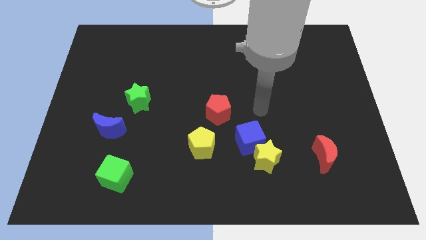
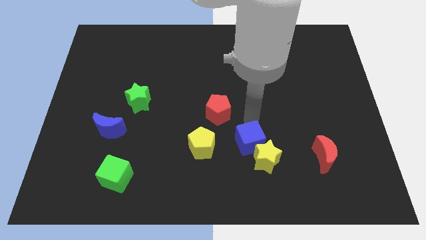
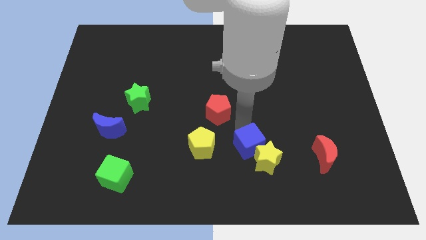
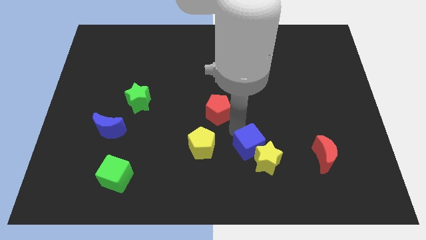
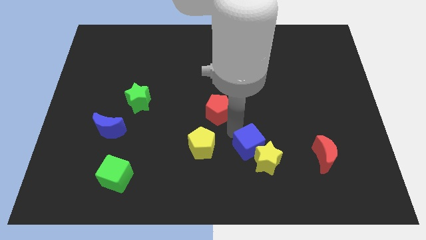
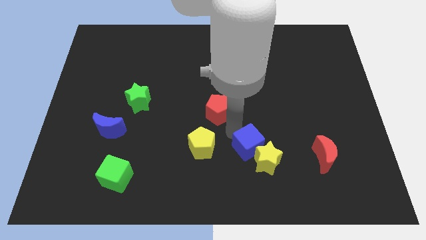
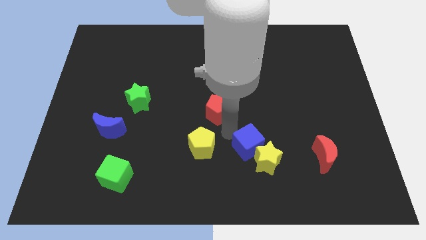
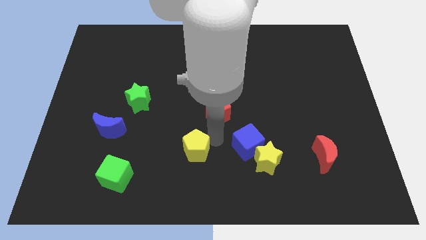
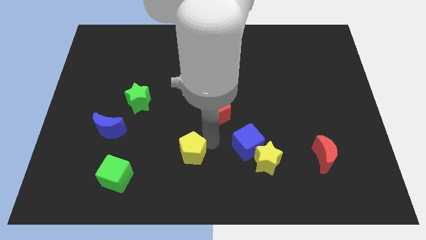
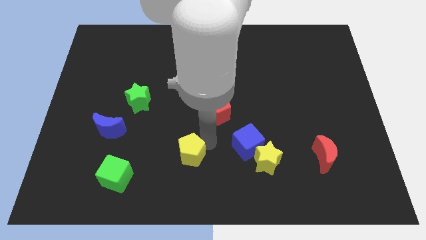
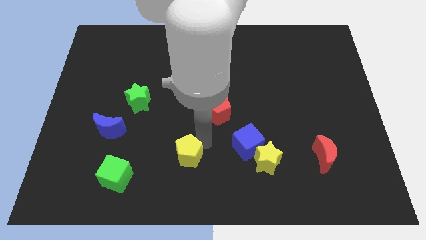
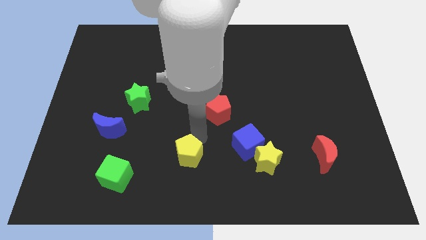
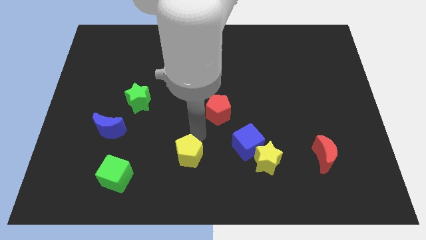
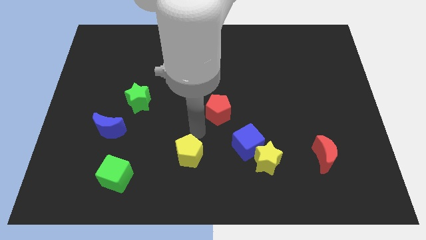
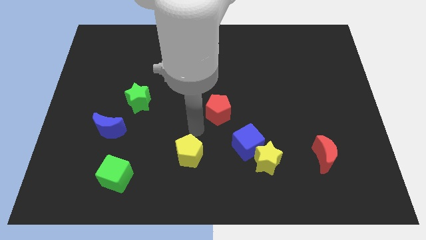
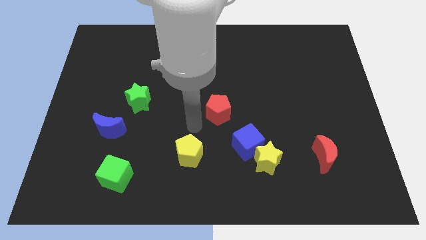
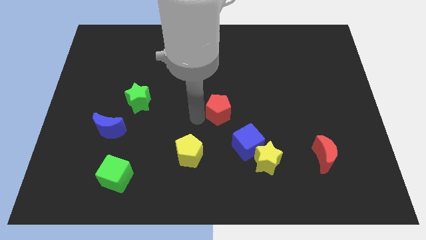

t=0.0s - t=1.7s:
move your arm to the left of the red pentagon

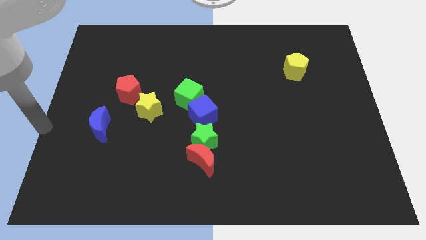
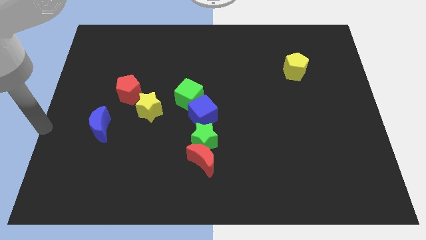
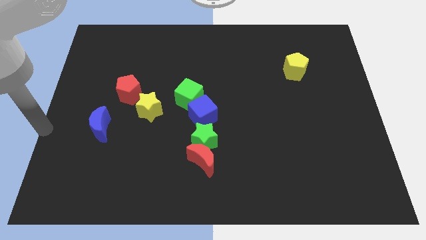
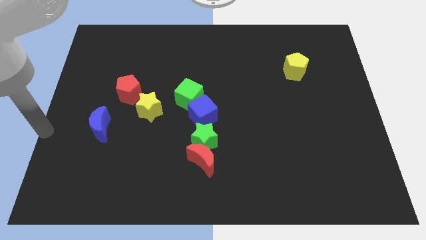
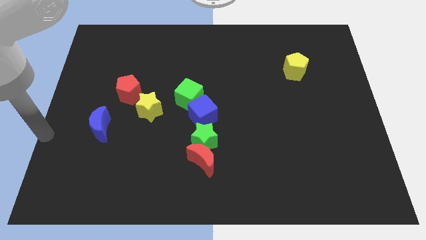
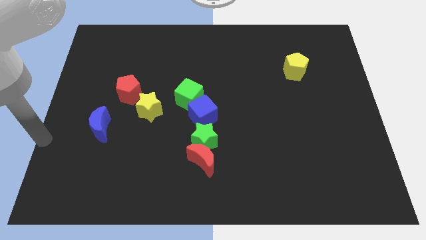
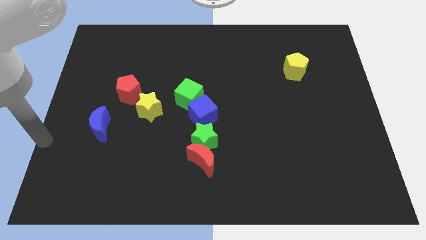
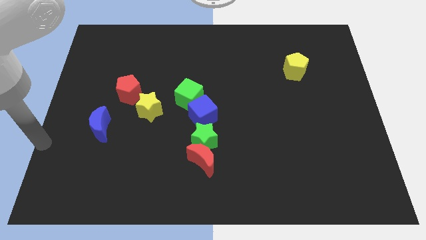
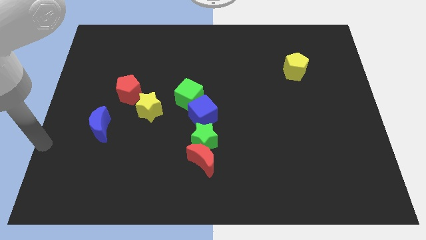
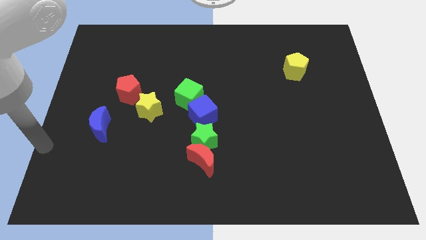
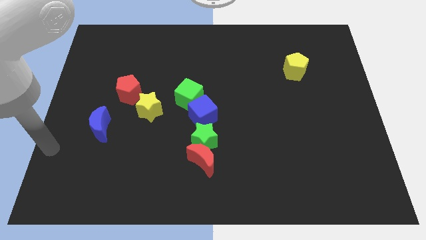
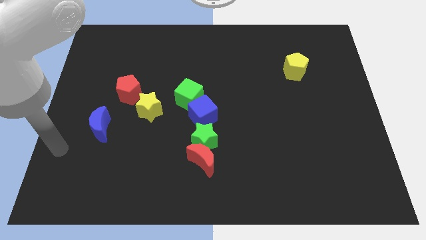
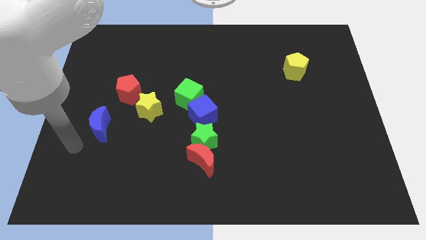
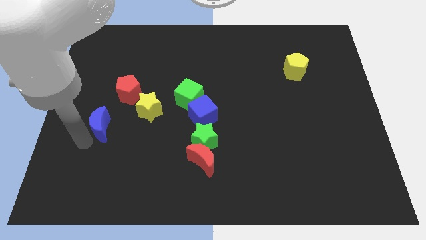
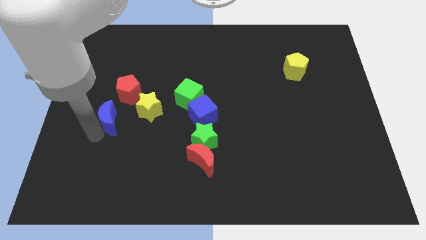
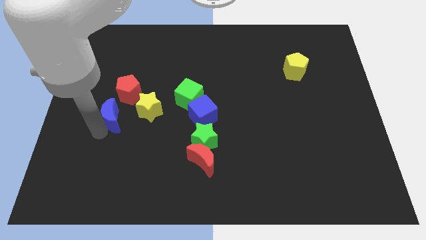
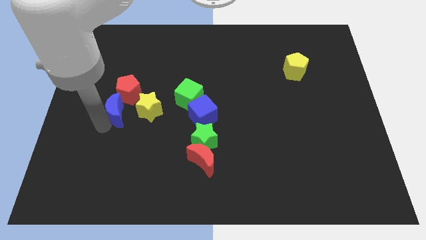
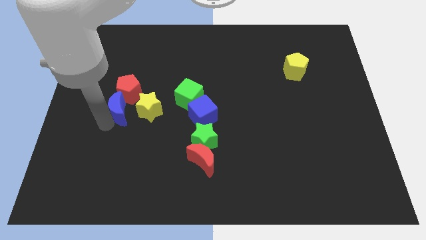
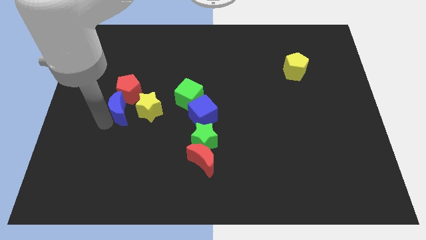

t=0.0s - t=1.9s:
slide the blue crescent towards the bottom left side of the red pentagon

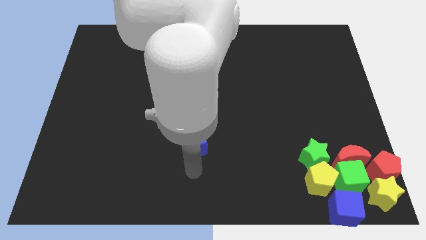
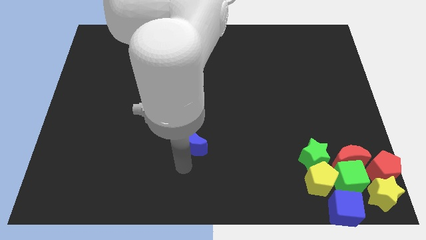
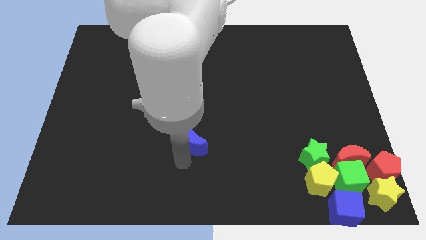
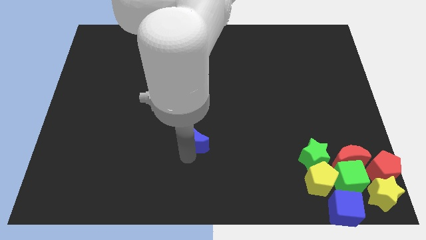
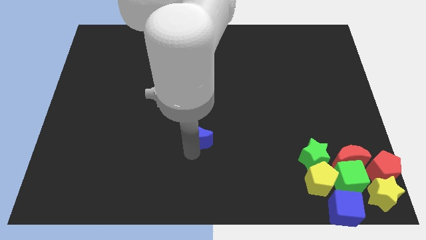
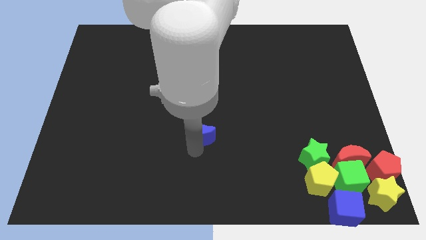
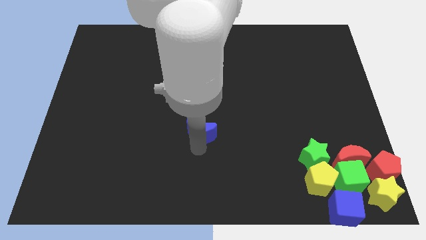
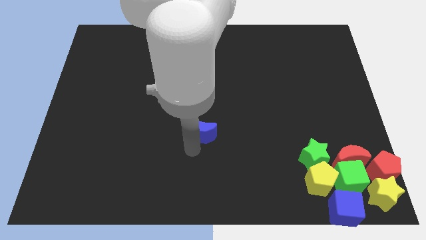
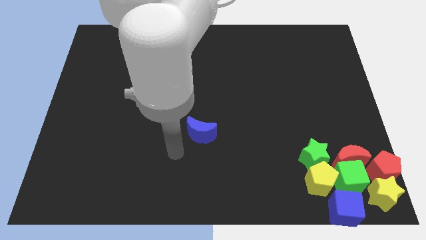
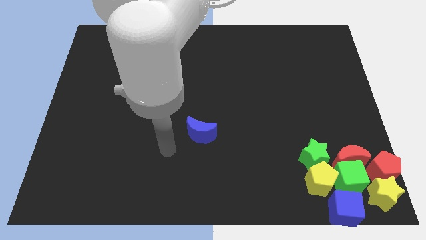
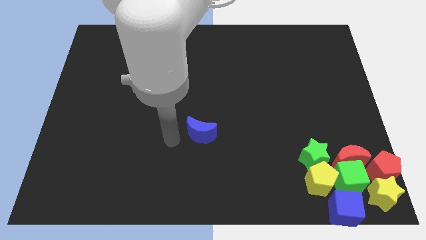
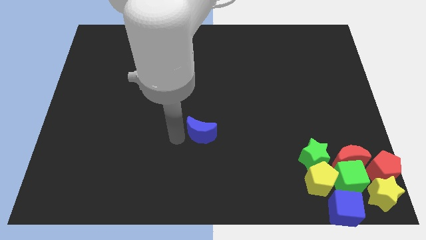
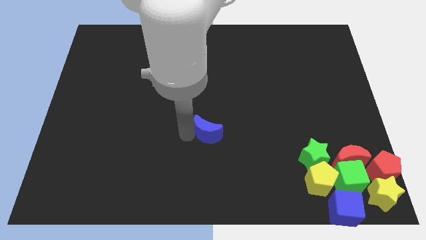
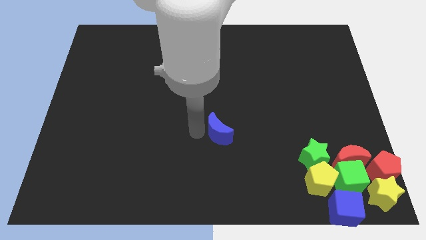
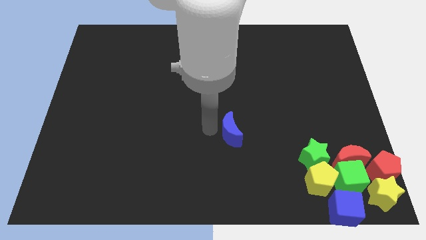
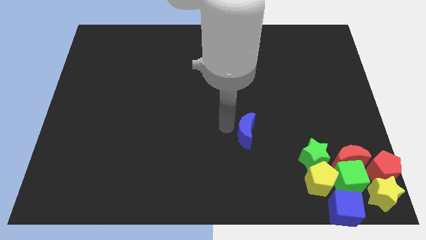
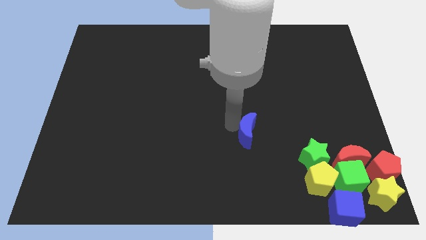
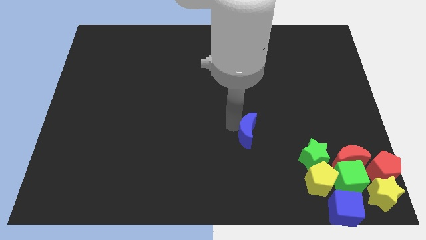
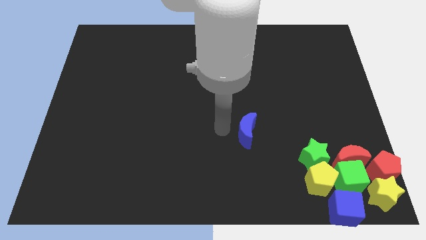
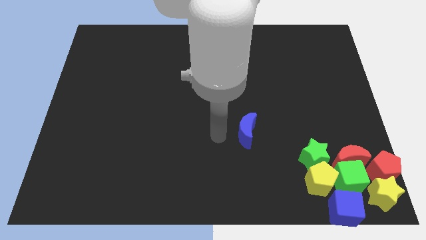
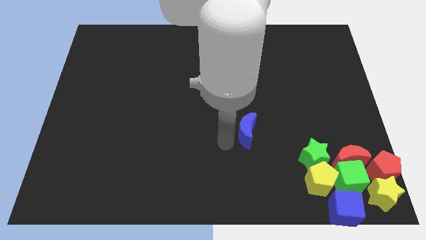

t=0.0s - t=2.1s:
move the blue moon towards the right side of the board

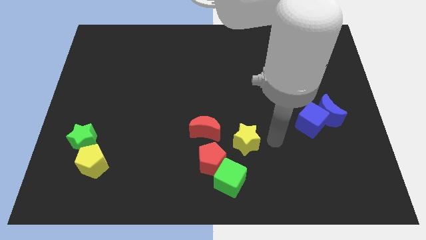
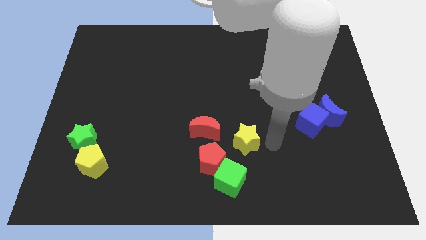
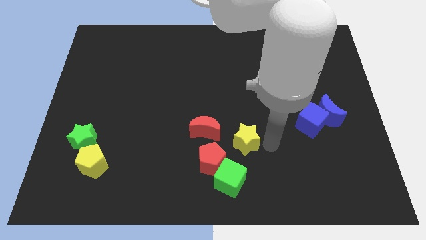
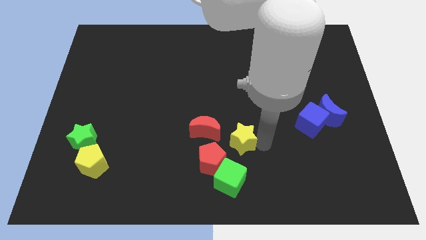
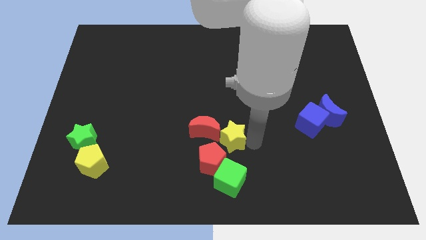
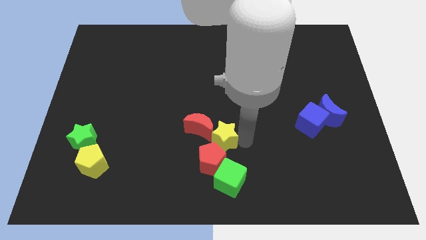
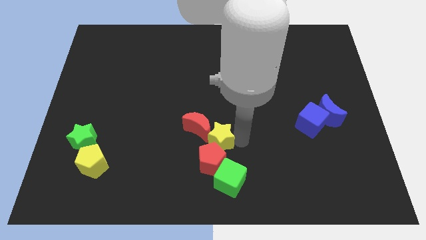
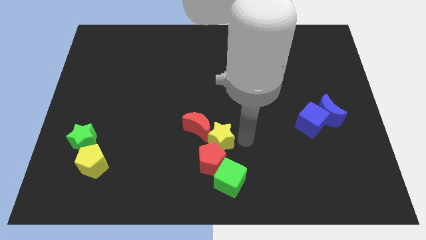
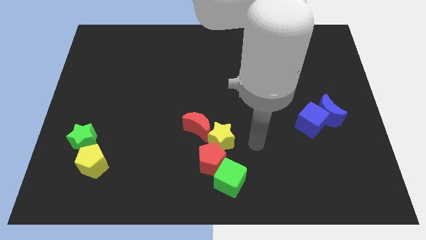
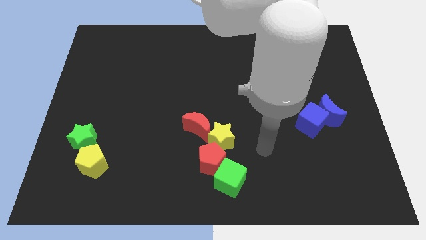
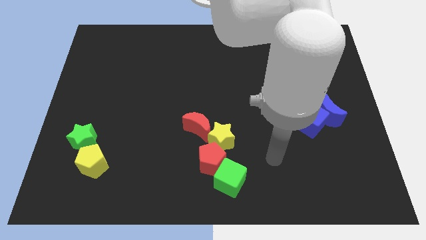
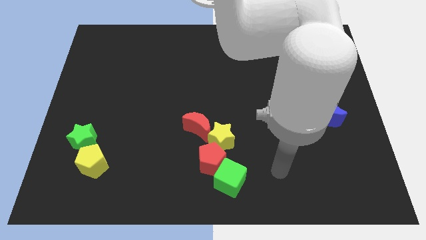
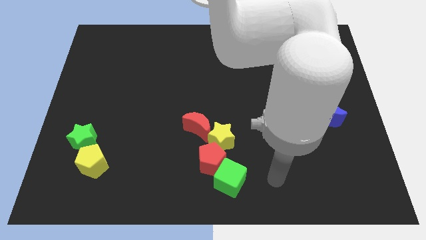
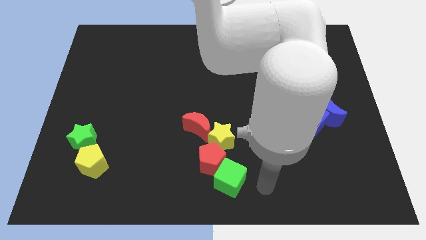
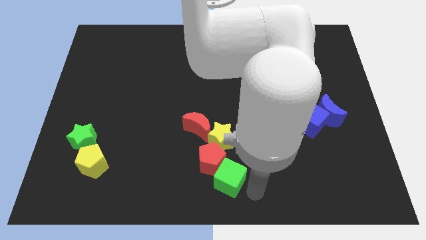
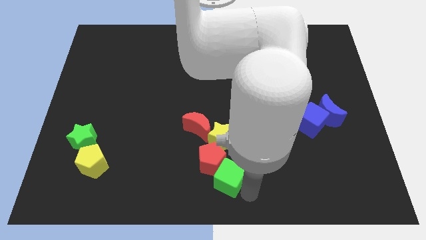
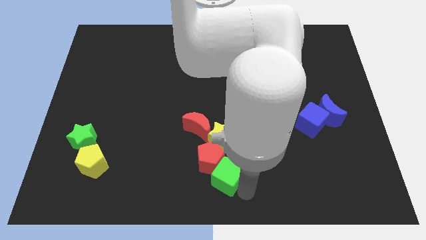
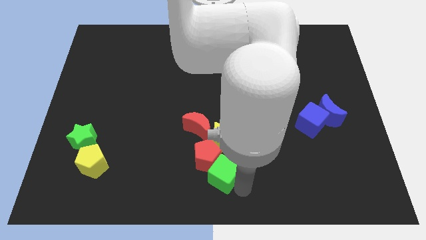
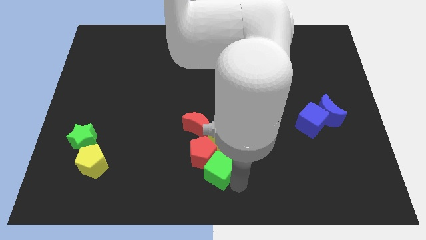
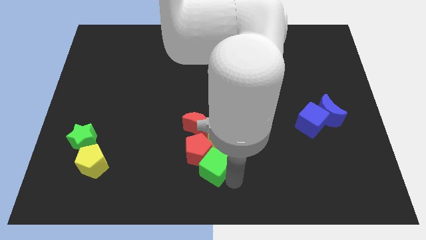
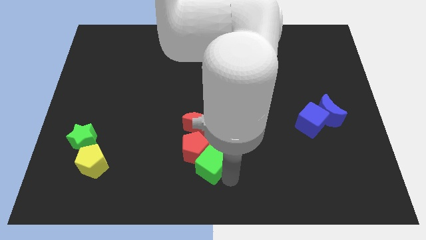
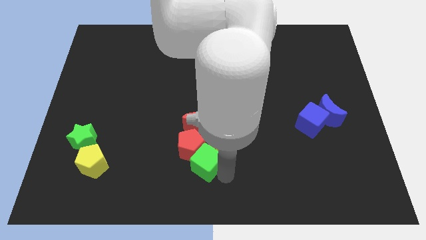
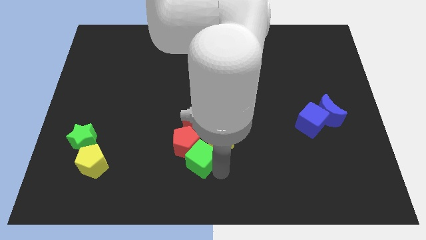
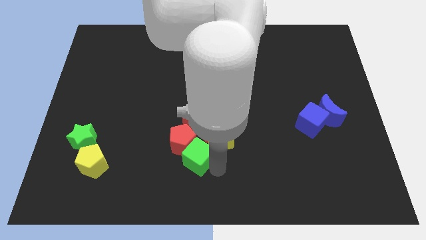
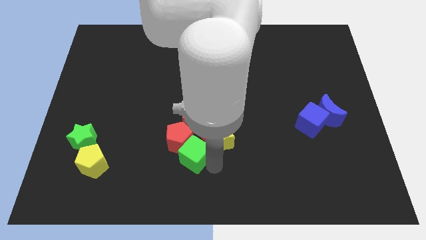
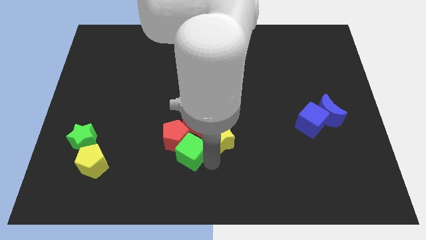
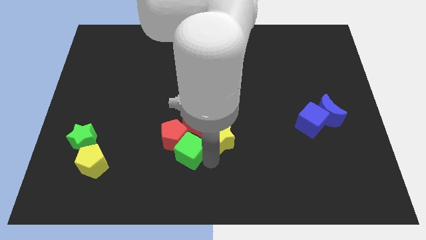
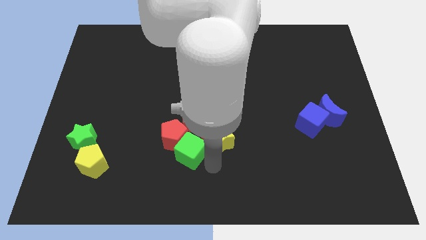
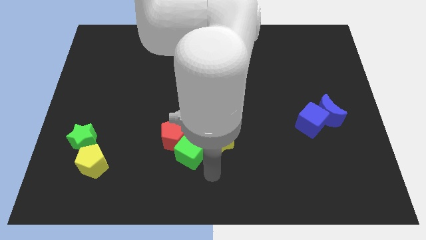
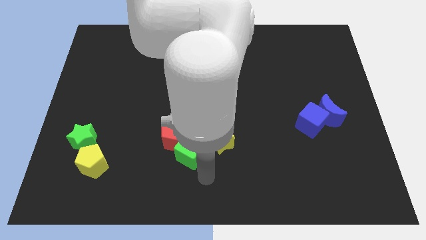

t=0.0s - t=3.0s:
push the yellow star into the red crescent

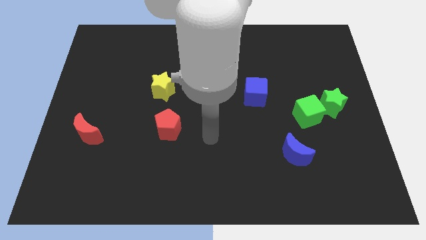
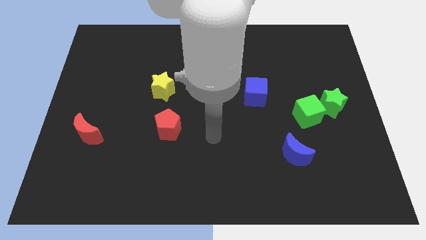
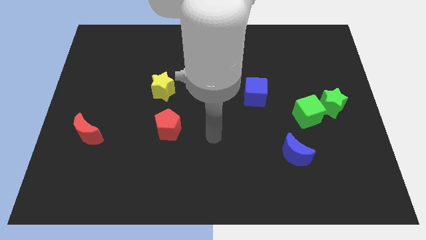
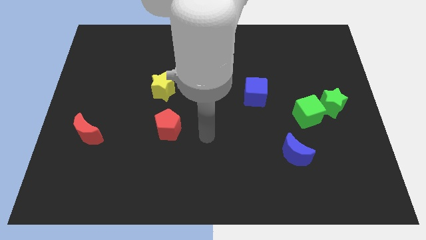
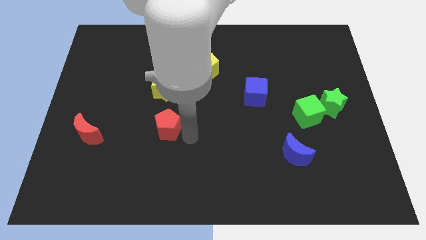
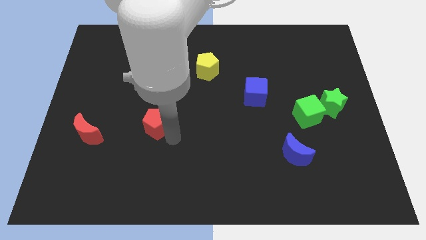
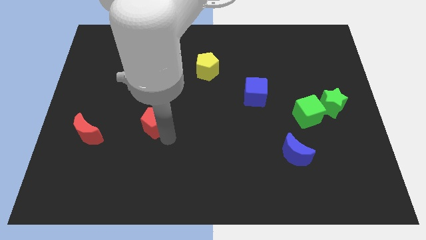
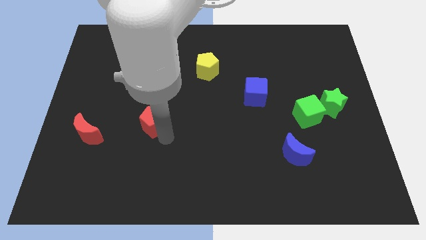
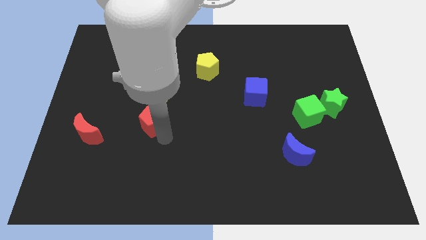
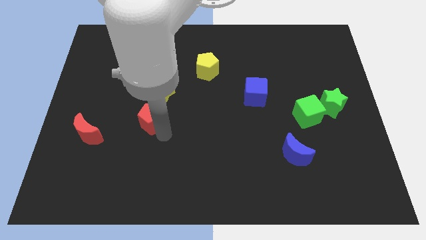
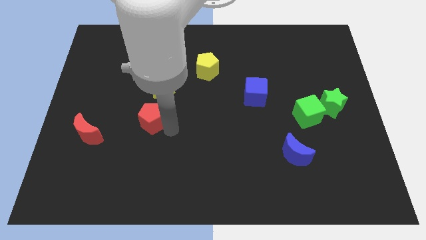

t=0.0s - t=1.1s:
place red pentagon below yellow star
